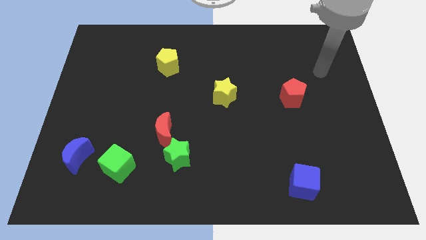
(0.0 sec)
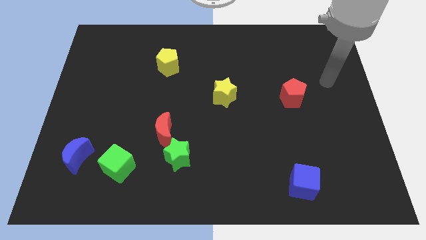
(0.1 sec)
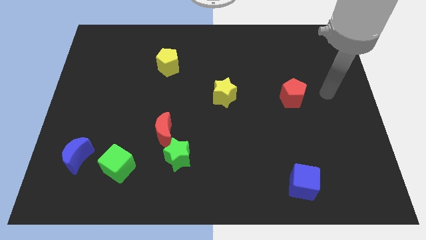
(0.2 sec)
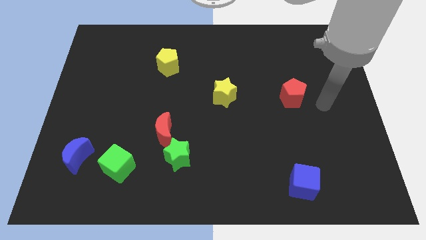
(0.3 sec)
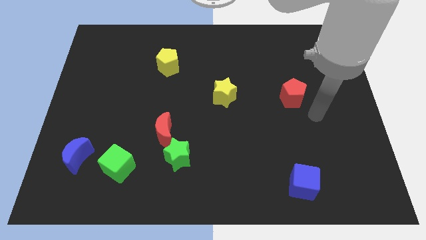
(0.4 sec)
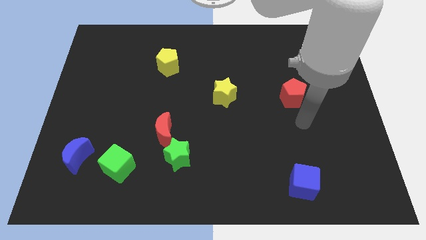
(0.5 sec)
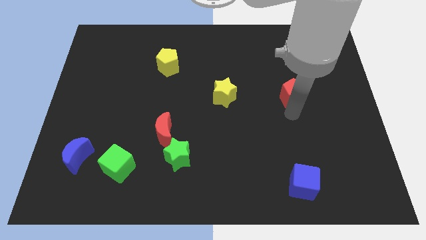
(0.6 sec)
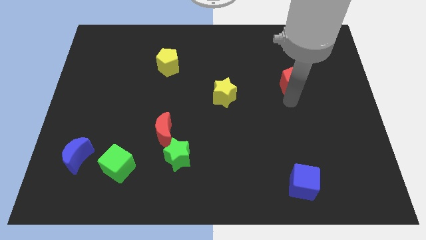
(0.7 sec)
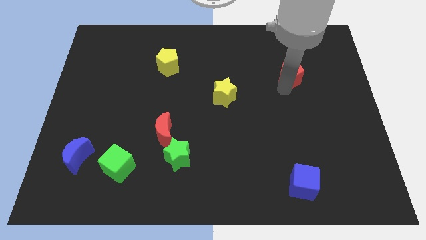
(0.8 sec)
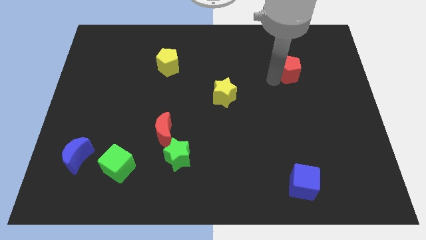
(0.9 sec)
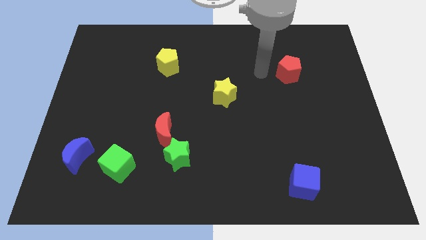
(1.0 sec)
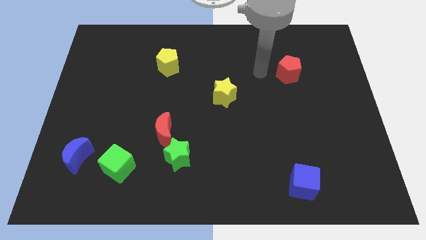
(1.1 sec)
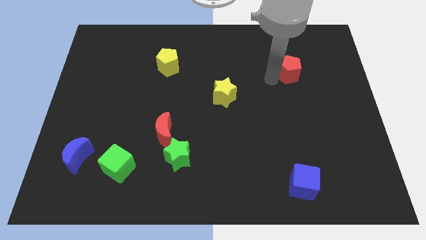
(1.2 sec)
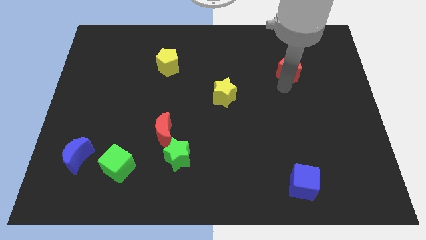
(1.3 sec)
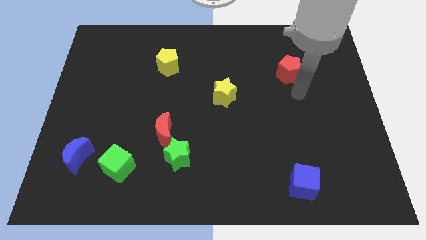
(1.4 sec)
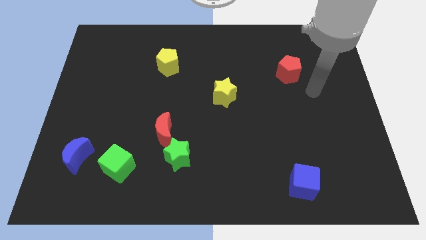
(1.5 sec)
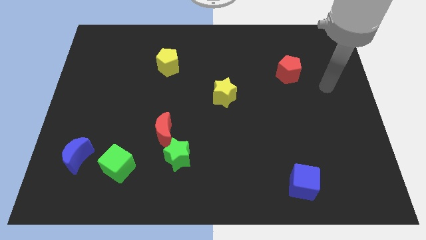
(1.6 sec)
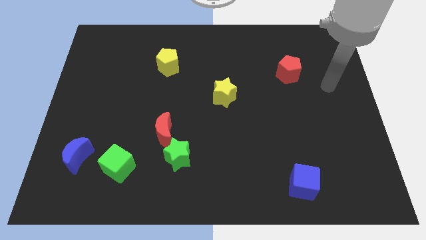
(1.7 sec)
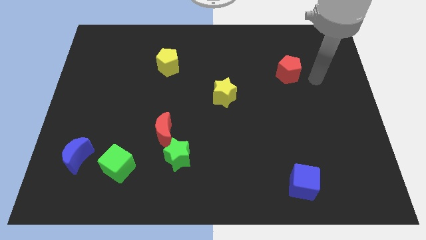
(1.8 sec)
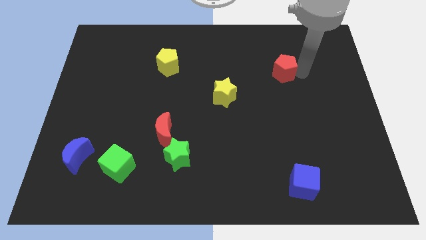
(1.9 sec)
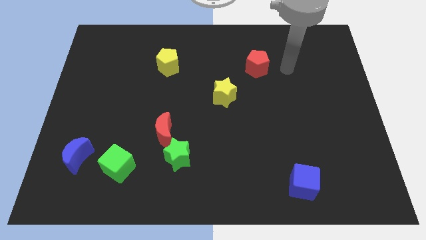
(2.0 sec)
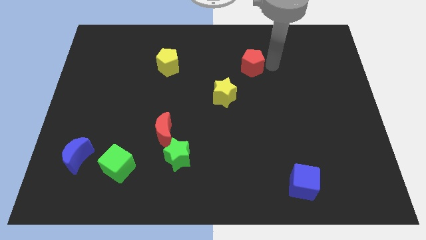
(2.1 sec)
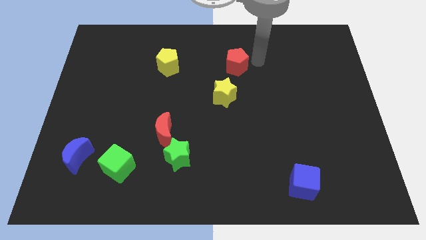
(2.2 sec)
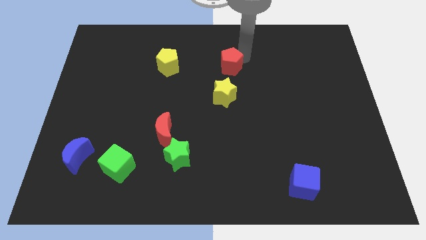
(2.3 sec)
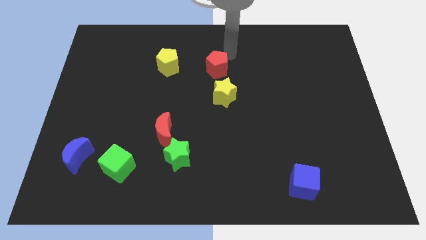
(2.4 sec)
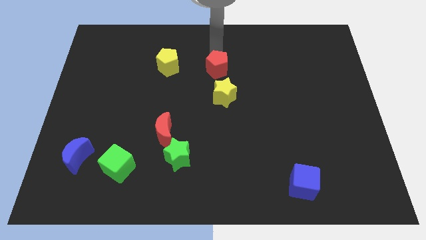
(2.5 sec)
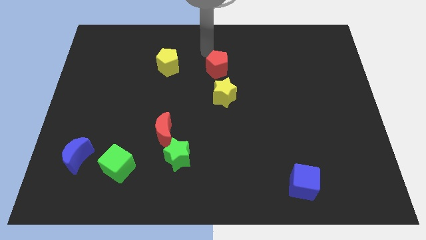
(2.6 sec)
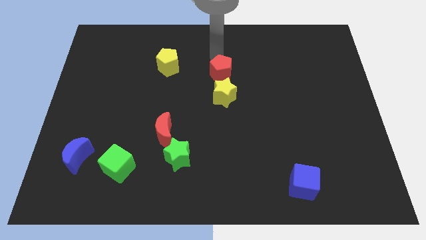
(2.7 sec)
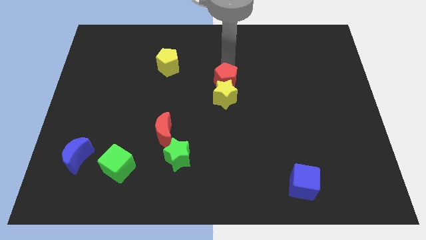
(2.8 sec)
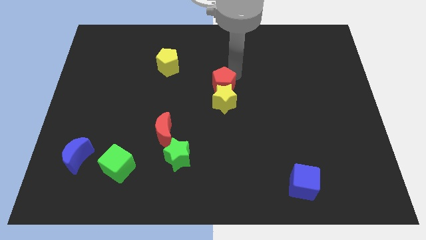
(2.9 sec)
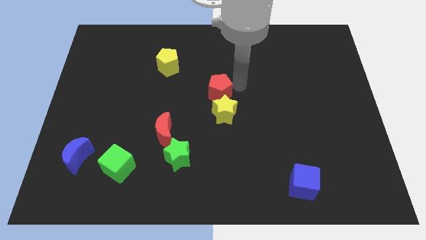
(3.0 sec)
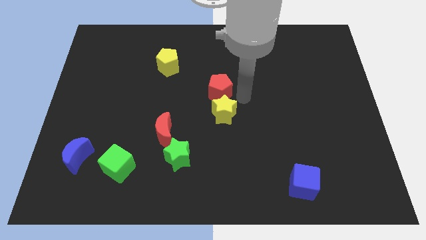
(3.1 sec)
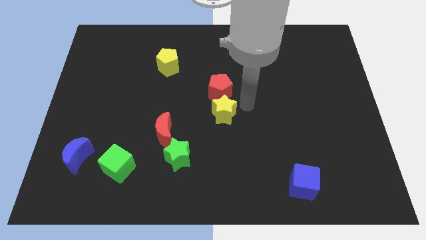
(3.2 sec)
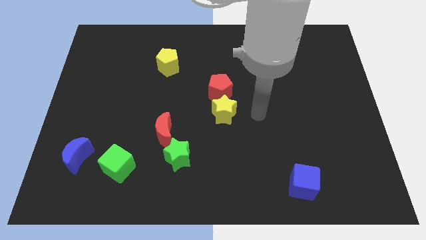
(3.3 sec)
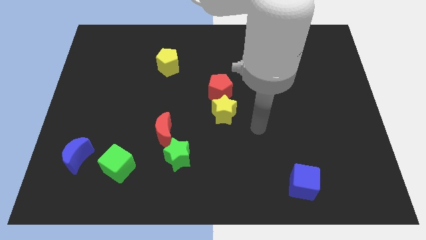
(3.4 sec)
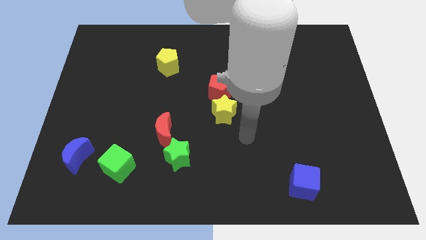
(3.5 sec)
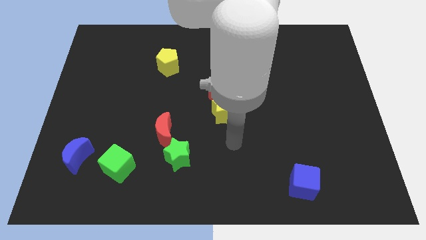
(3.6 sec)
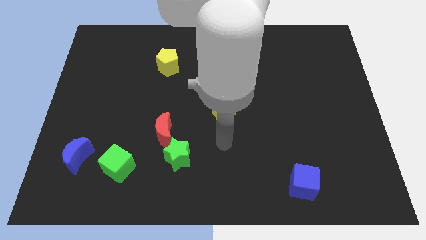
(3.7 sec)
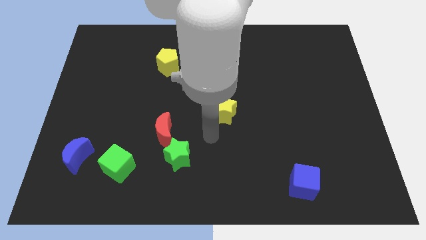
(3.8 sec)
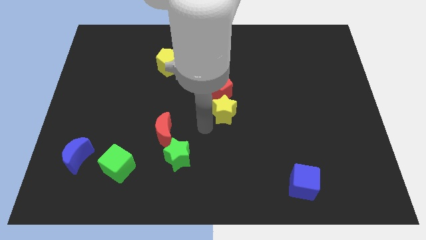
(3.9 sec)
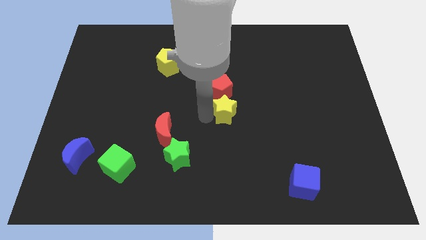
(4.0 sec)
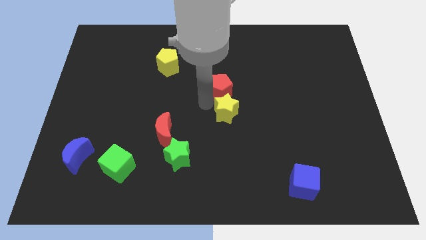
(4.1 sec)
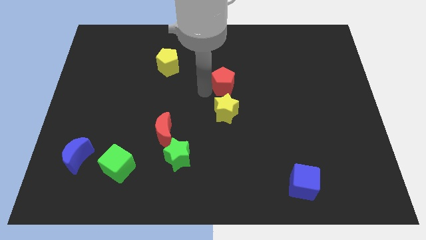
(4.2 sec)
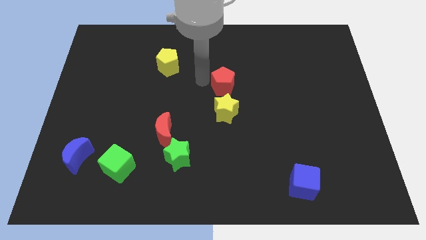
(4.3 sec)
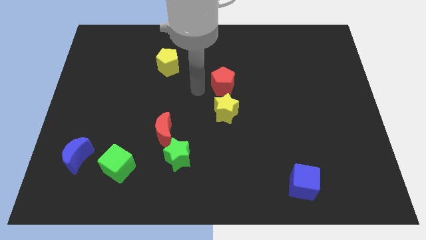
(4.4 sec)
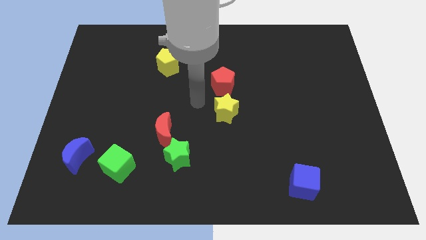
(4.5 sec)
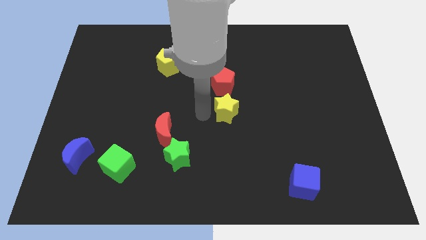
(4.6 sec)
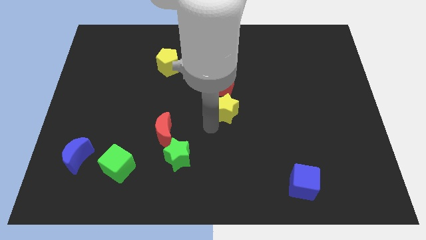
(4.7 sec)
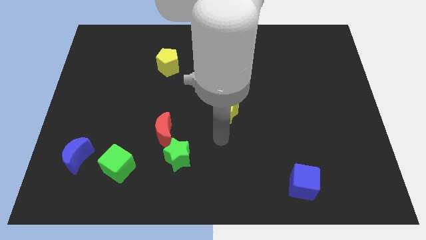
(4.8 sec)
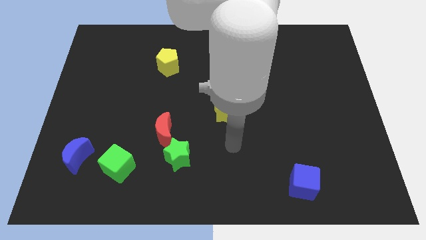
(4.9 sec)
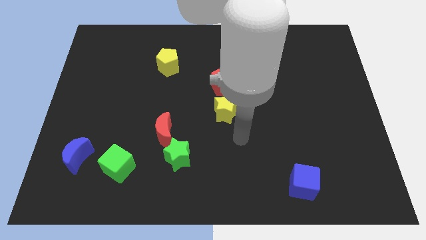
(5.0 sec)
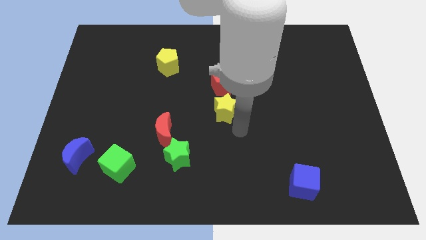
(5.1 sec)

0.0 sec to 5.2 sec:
place the red pentagon above the yellow star

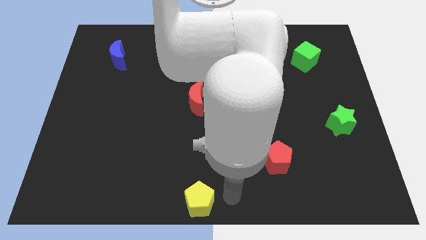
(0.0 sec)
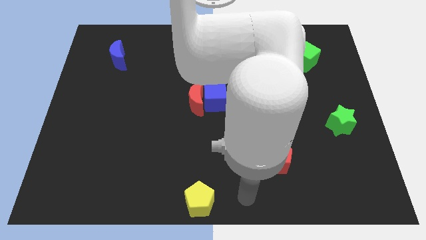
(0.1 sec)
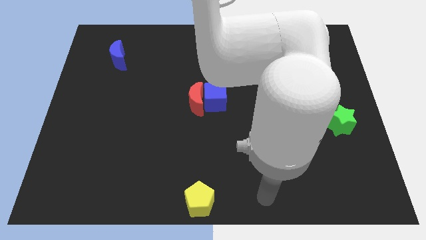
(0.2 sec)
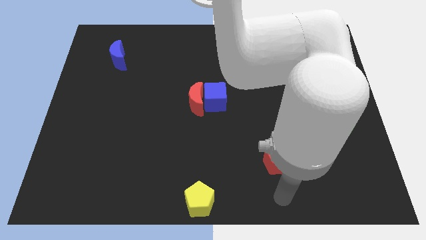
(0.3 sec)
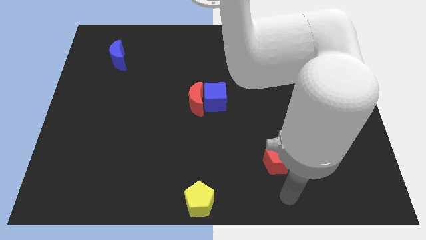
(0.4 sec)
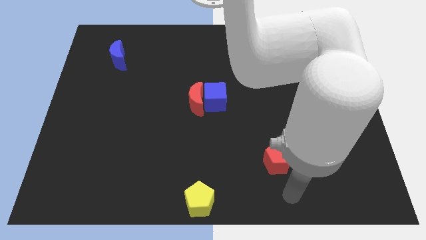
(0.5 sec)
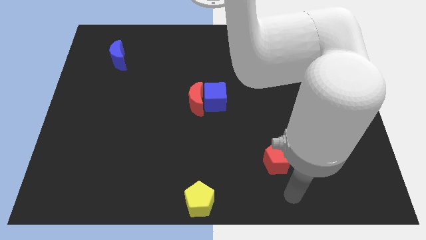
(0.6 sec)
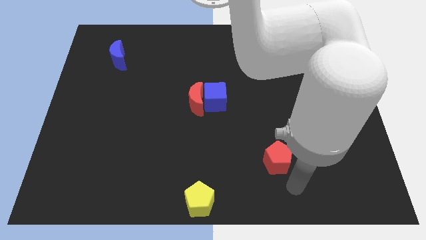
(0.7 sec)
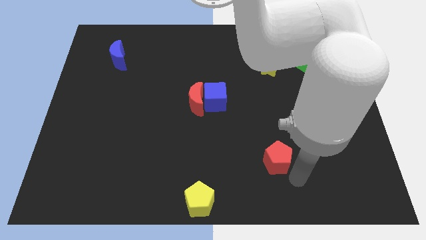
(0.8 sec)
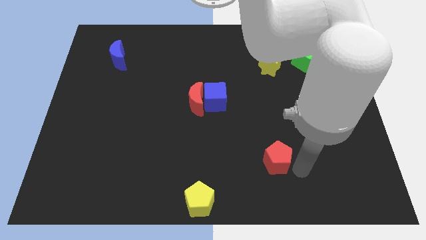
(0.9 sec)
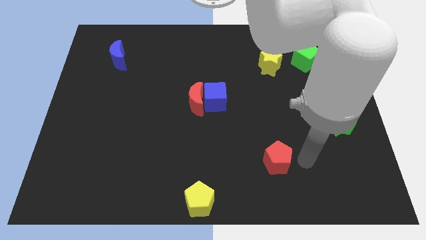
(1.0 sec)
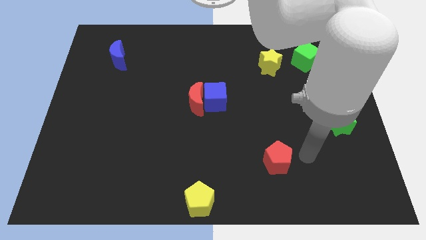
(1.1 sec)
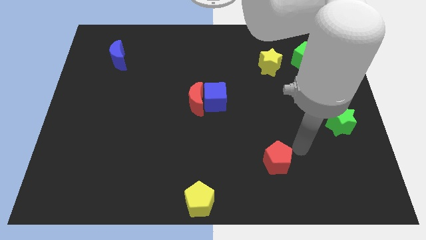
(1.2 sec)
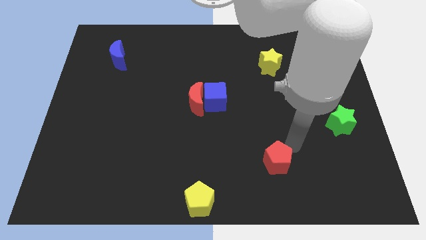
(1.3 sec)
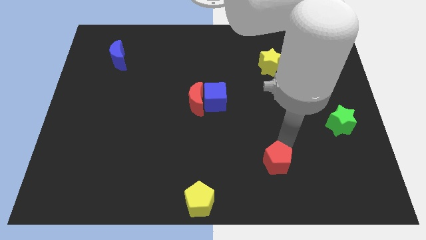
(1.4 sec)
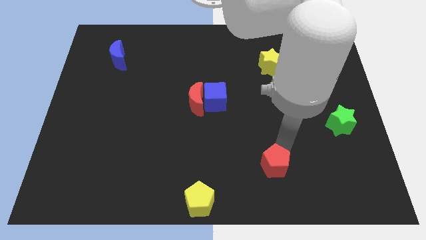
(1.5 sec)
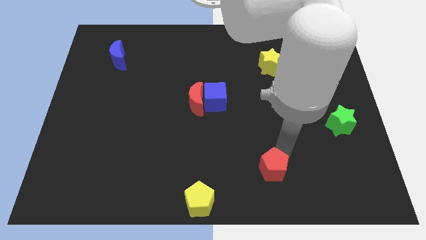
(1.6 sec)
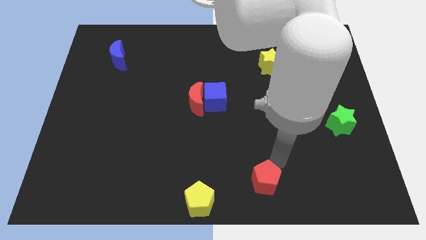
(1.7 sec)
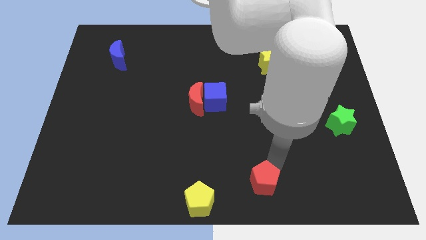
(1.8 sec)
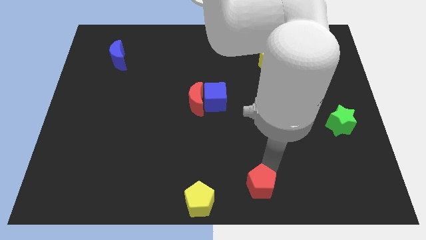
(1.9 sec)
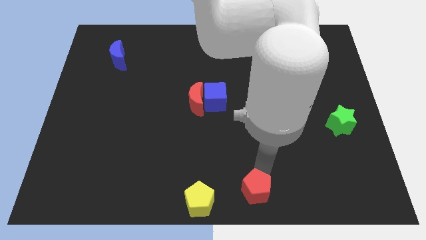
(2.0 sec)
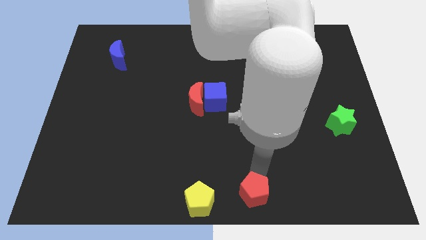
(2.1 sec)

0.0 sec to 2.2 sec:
move your arm away from the yellow pentagon

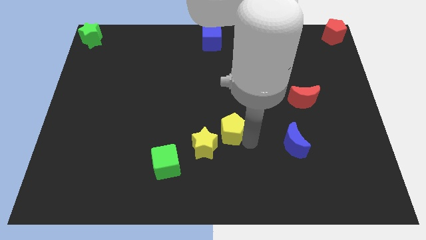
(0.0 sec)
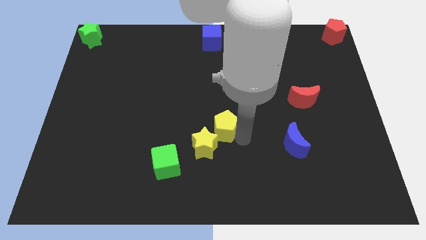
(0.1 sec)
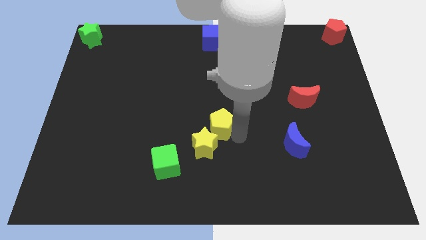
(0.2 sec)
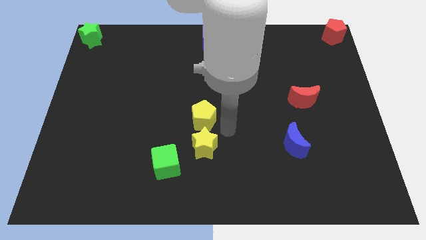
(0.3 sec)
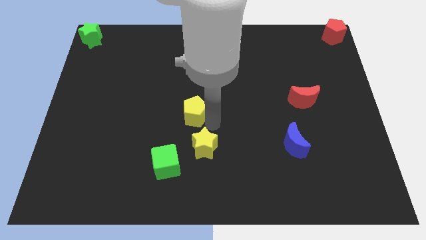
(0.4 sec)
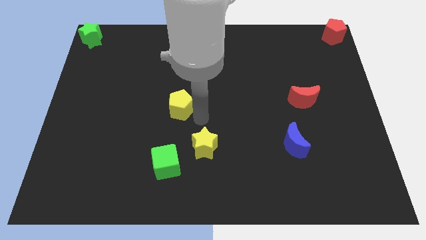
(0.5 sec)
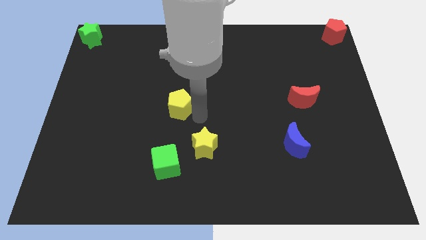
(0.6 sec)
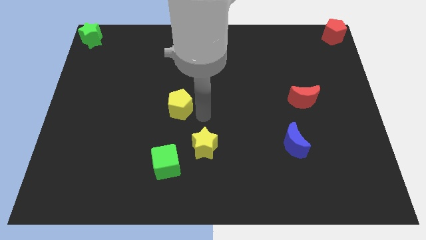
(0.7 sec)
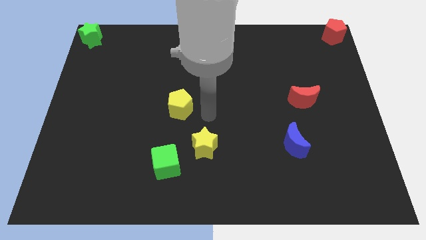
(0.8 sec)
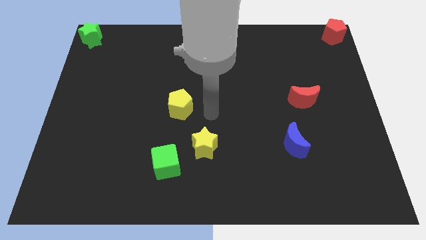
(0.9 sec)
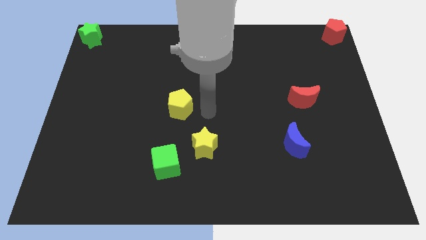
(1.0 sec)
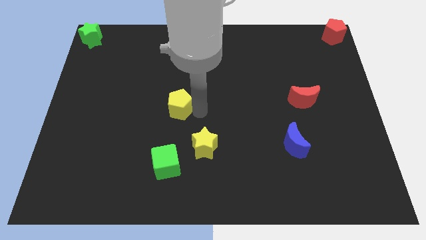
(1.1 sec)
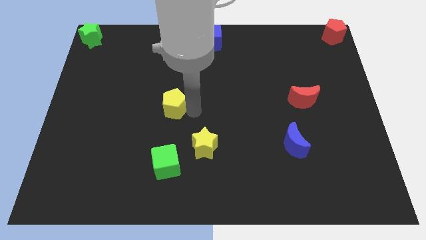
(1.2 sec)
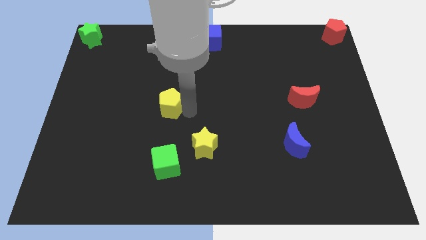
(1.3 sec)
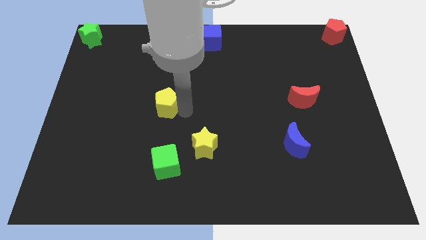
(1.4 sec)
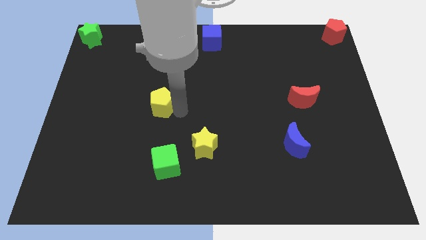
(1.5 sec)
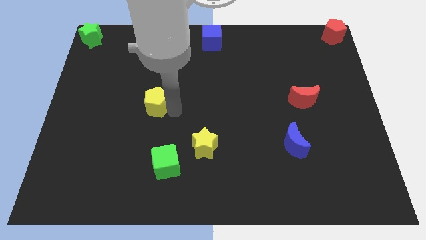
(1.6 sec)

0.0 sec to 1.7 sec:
place the yellow pentagon above the green cube
